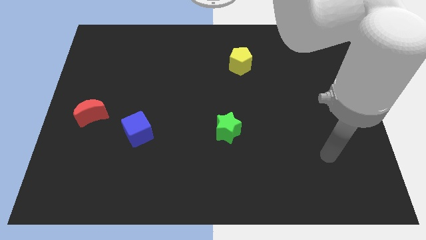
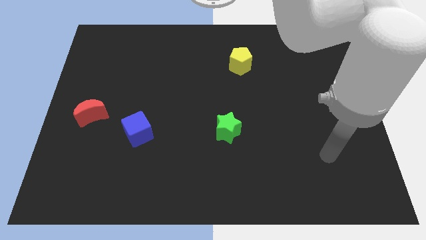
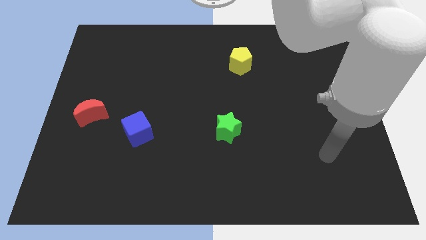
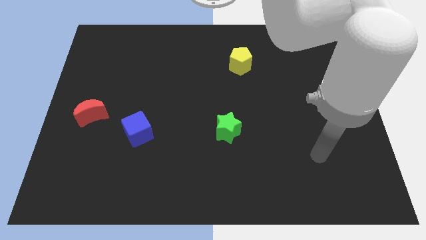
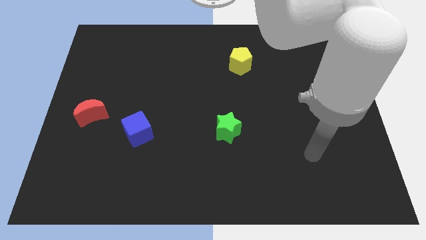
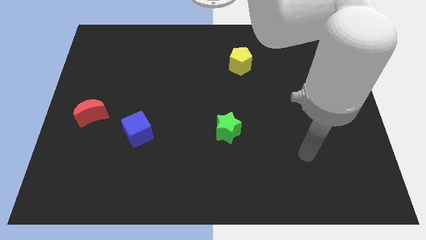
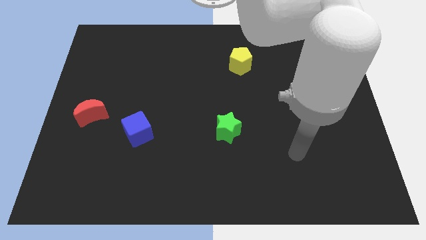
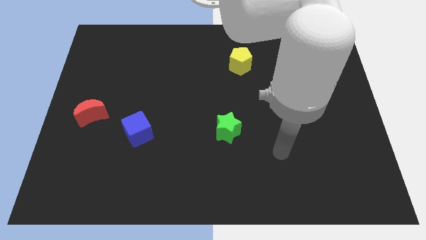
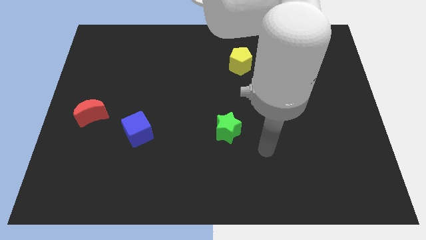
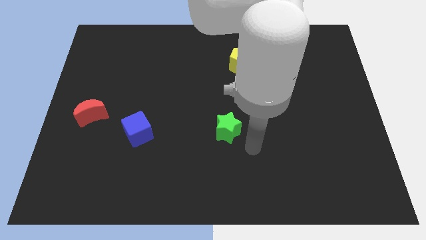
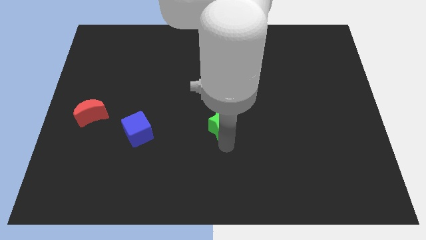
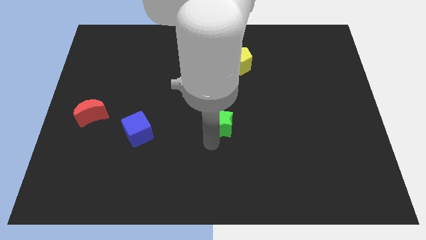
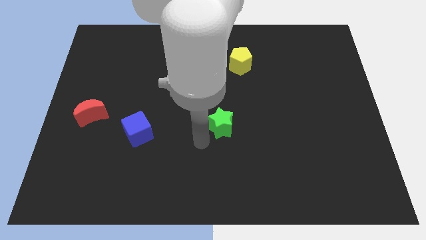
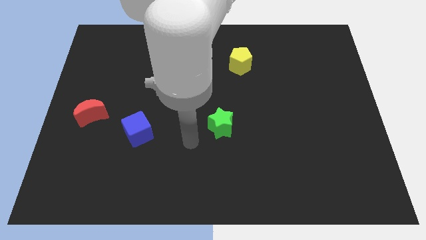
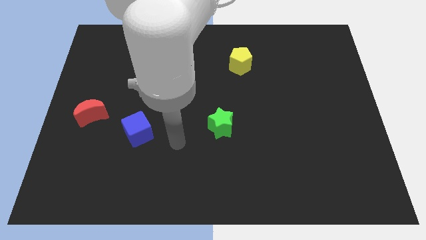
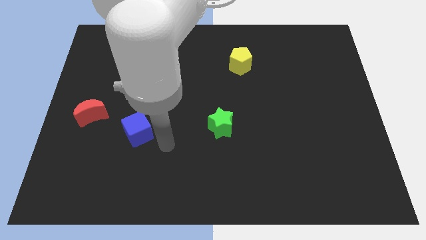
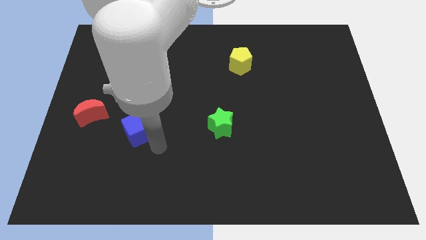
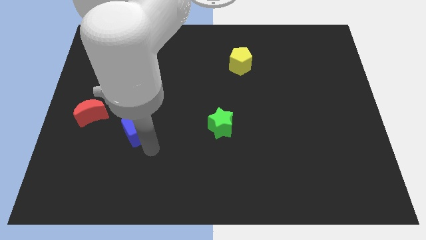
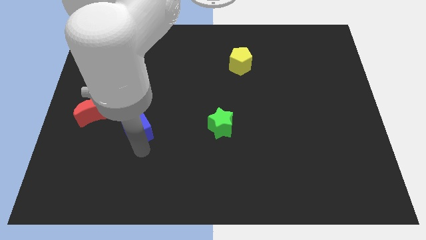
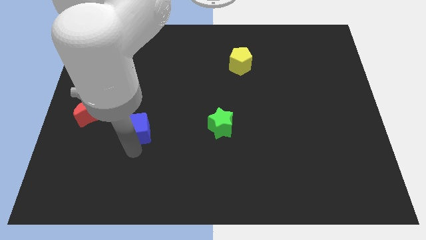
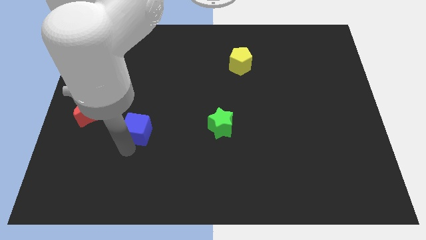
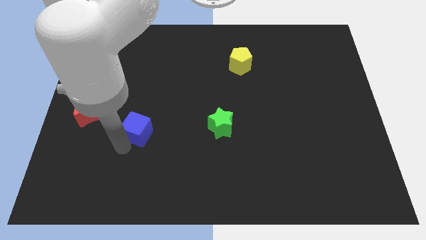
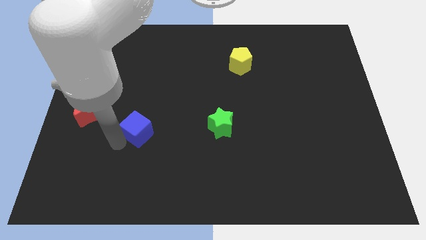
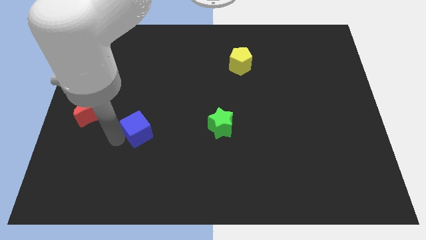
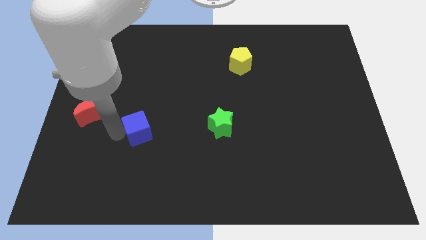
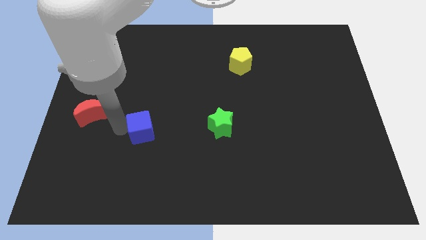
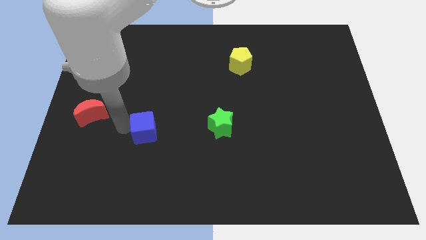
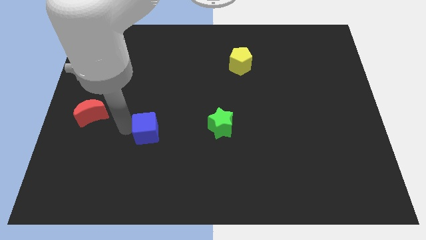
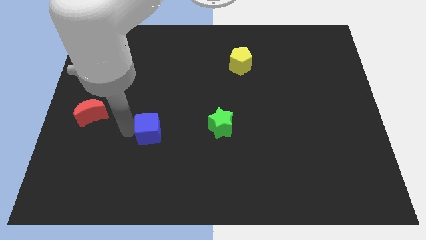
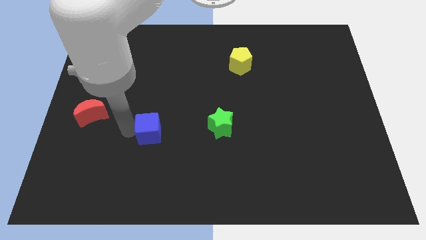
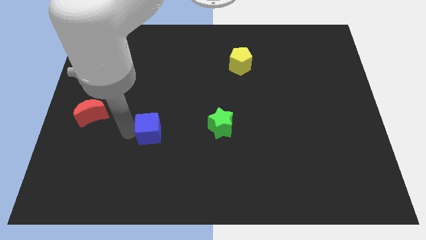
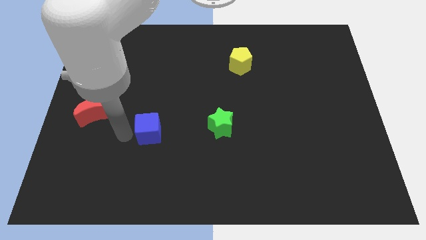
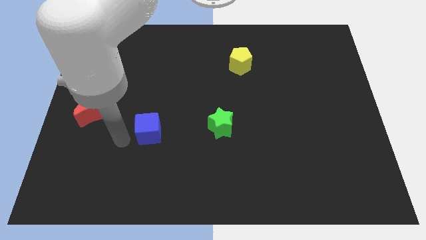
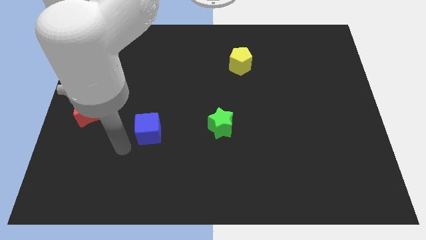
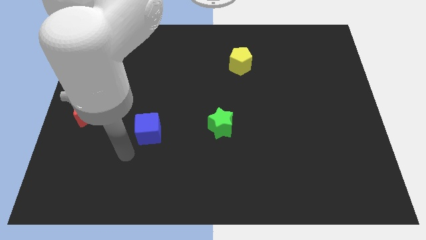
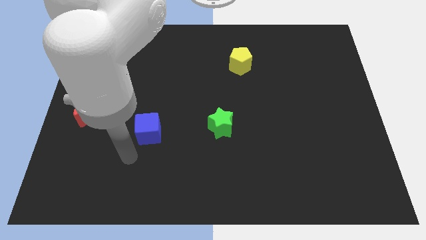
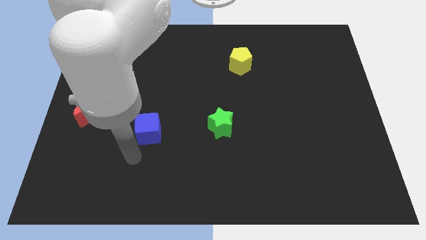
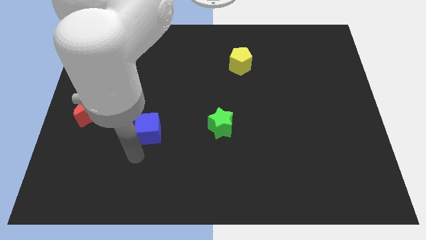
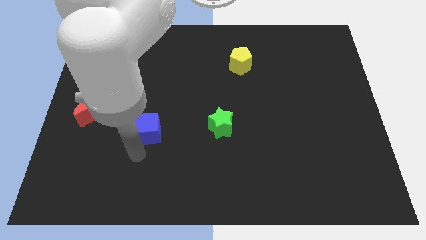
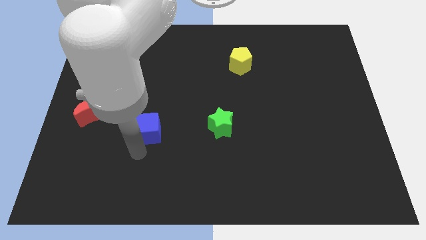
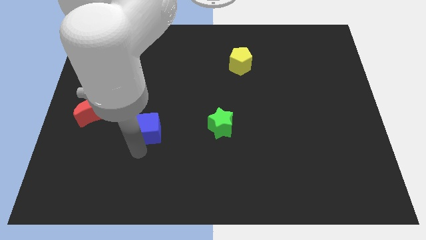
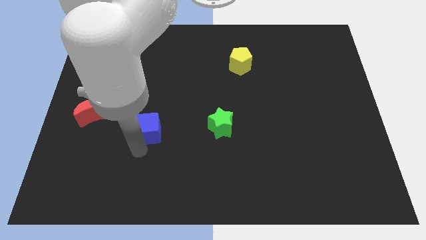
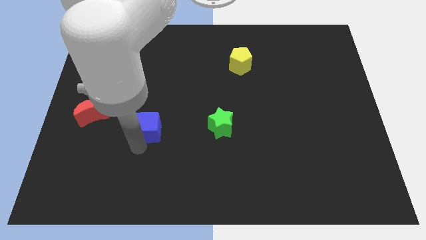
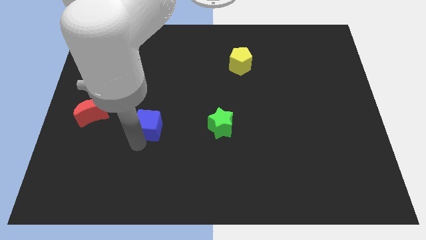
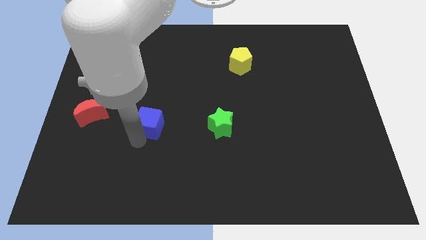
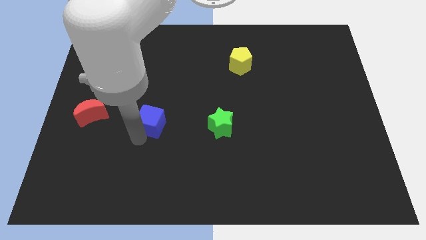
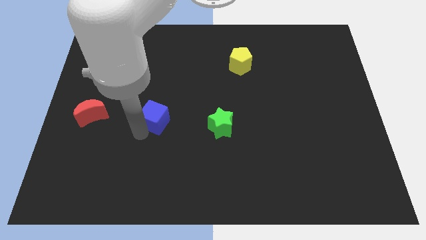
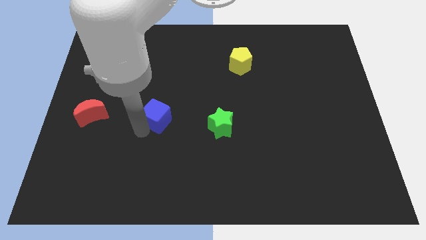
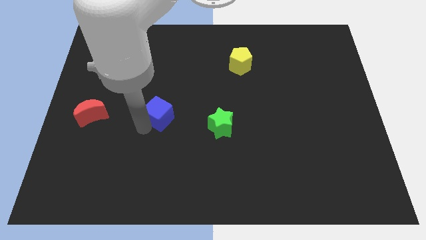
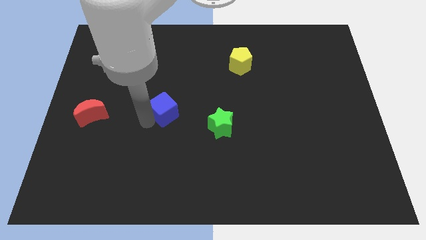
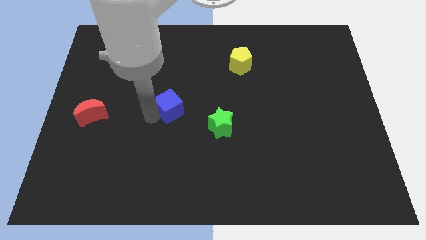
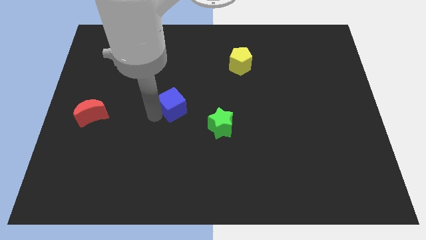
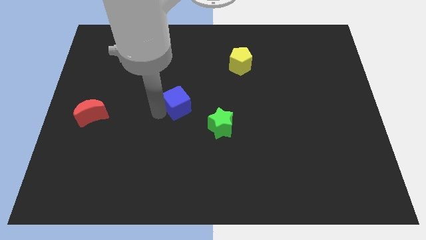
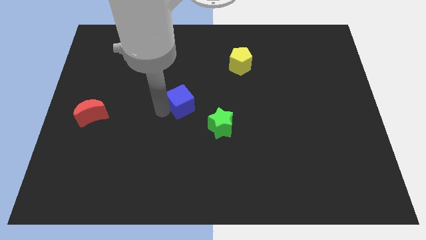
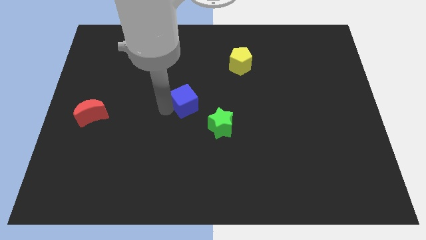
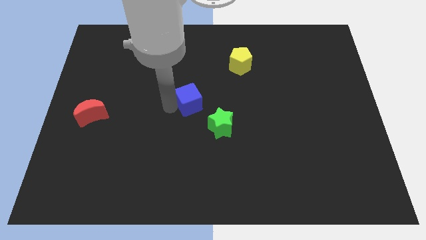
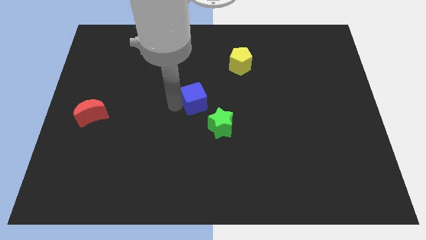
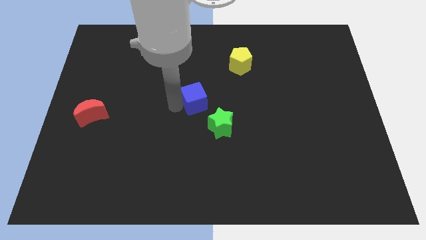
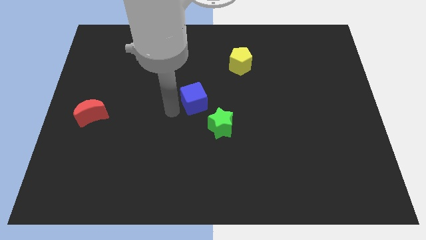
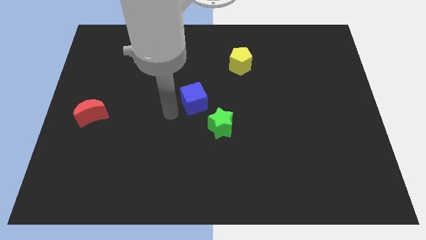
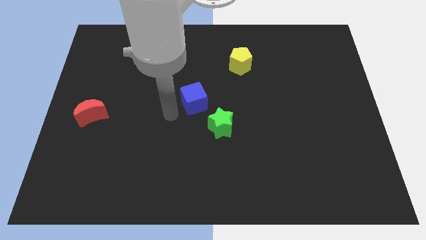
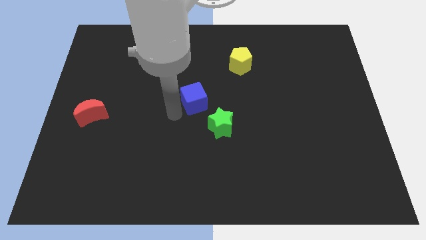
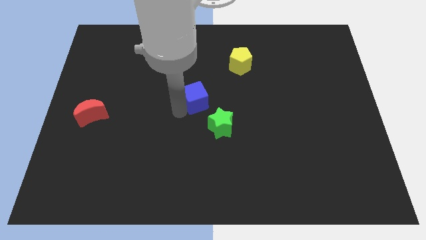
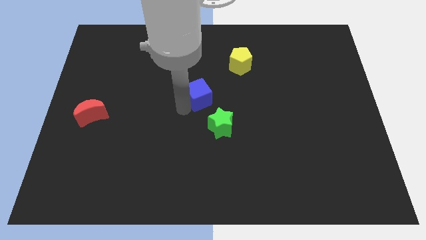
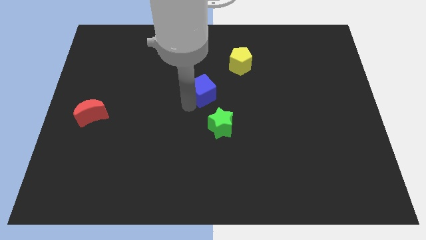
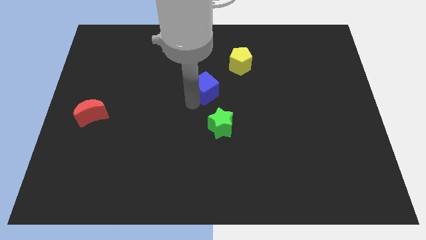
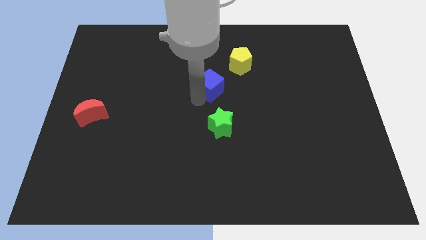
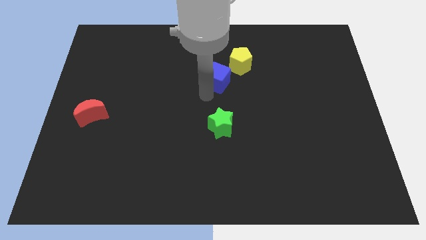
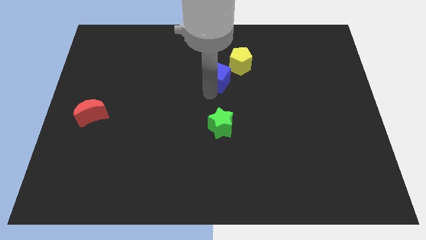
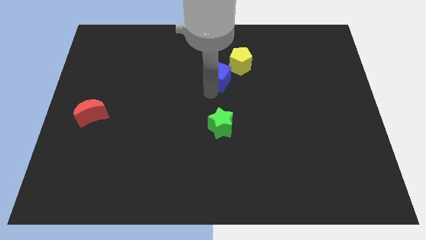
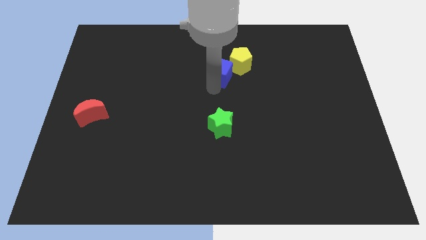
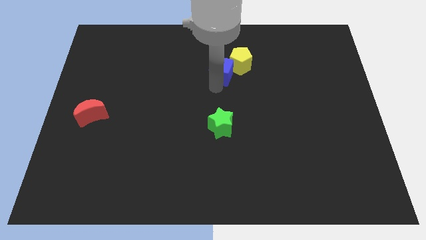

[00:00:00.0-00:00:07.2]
move the blue cube towards the yellow block

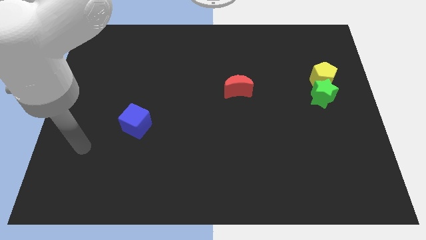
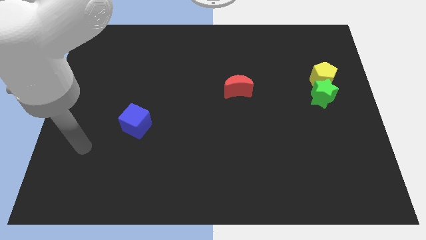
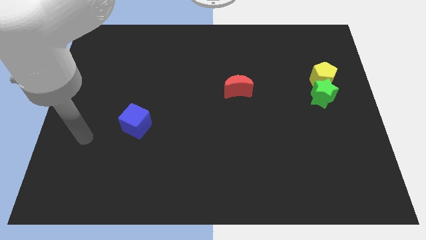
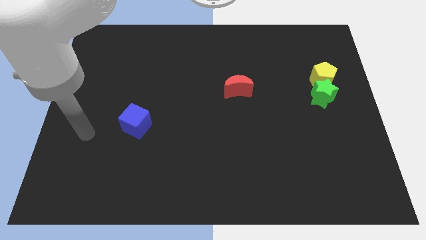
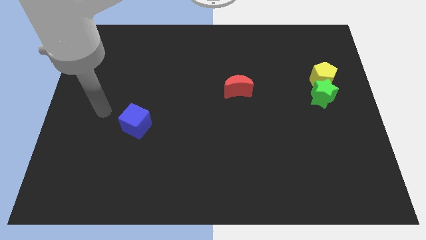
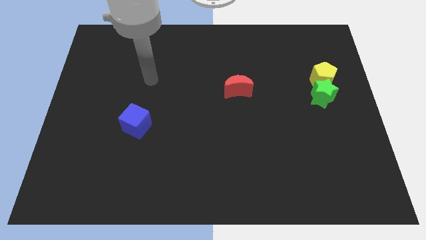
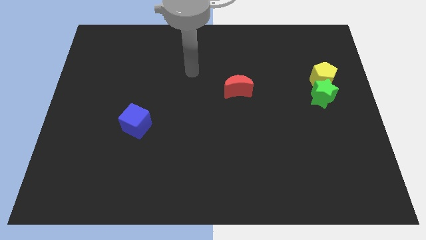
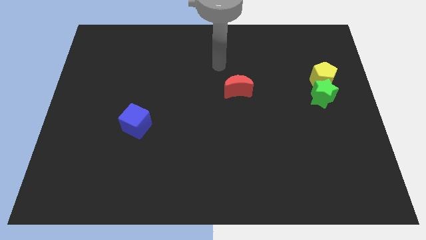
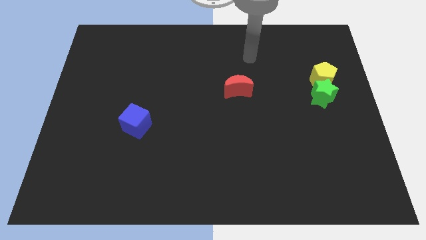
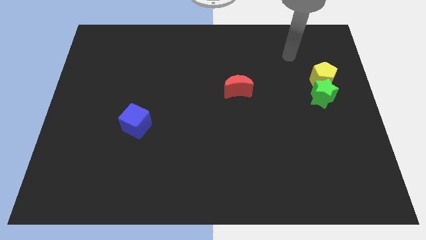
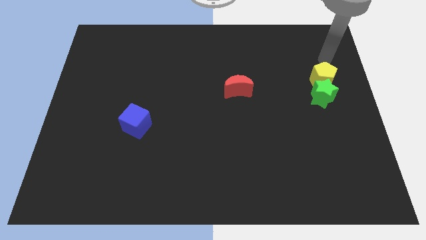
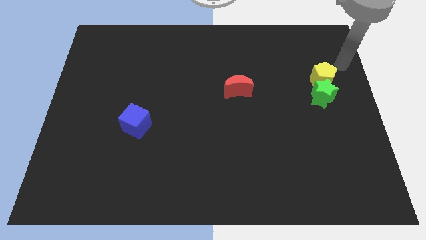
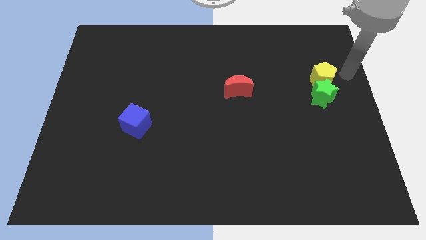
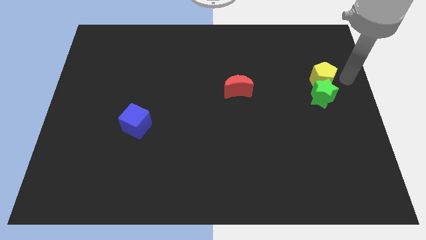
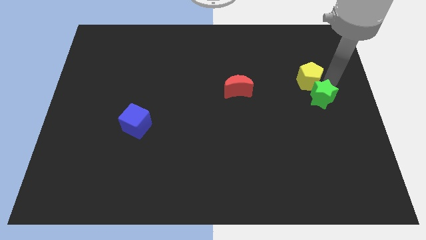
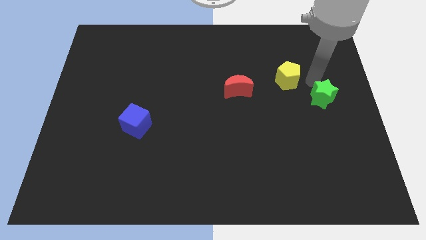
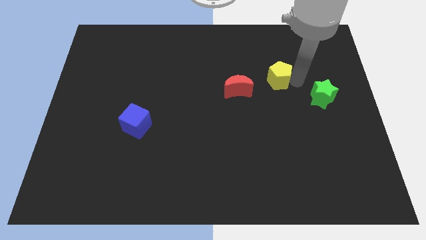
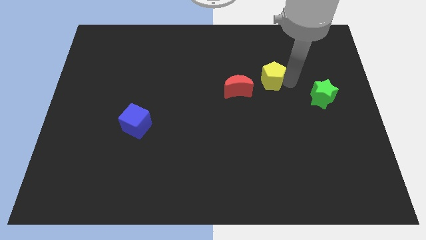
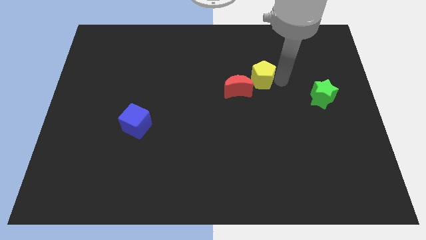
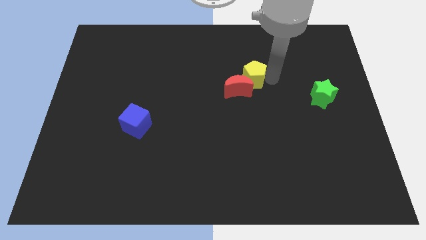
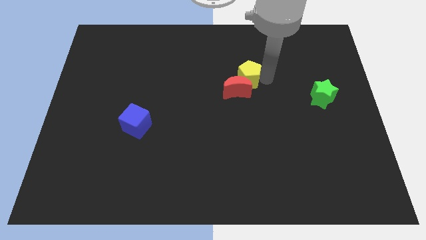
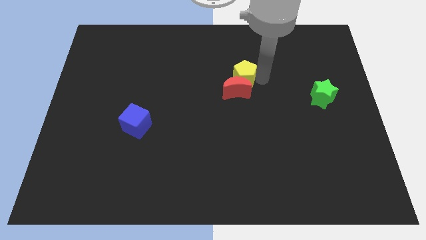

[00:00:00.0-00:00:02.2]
push the yellow block close to the red block
